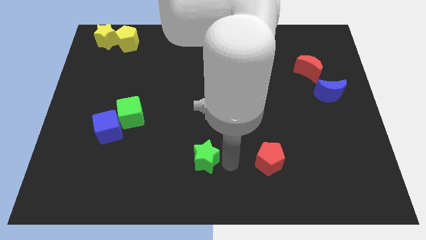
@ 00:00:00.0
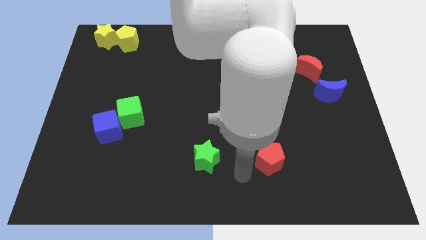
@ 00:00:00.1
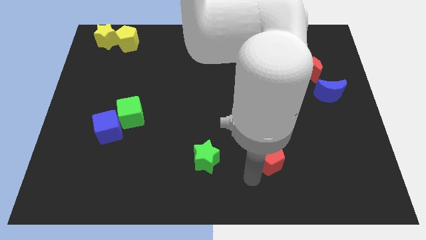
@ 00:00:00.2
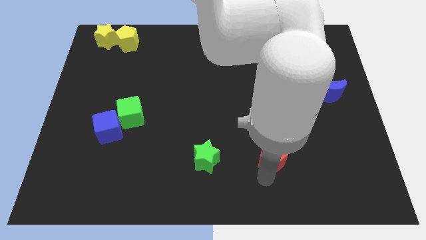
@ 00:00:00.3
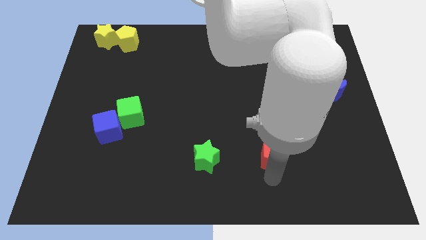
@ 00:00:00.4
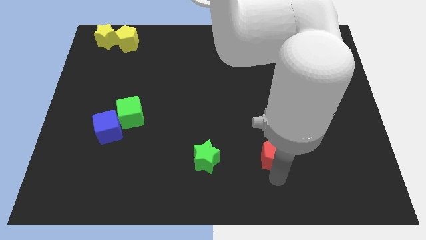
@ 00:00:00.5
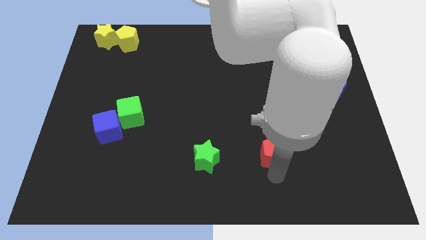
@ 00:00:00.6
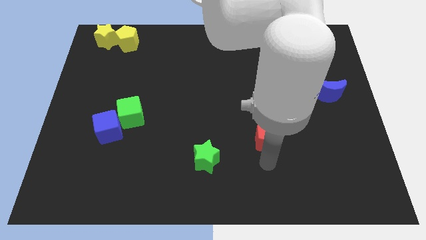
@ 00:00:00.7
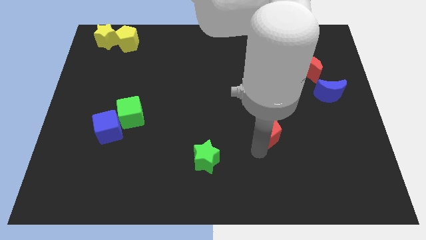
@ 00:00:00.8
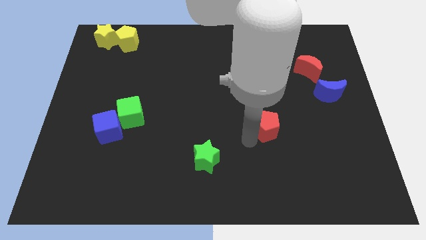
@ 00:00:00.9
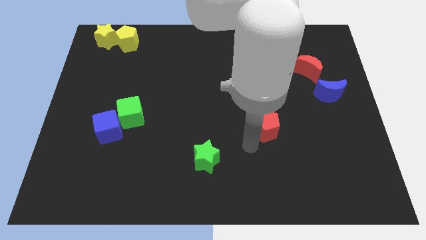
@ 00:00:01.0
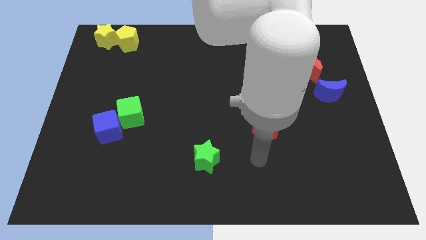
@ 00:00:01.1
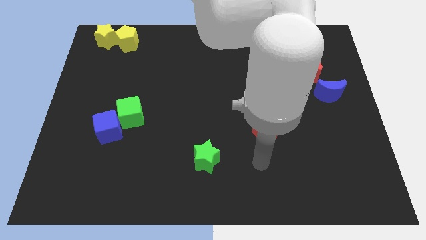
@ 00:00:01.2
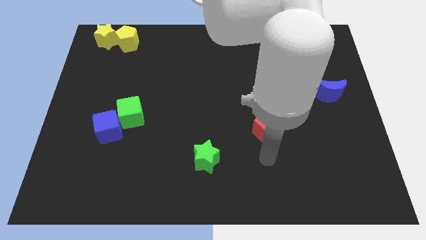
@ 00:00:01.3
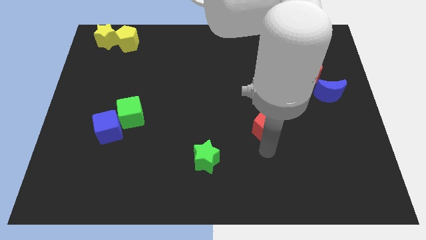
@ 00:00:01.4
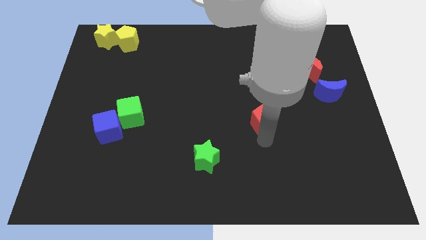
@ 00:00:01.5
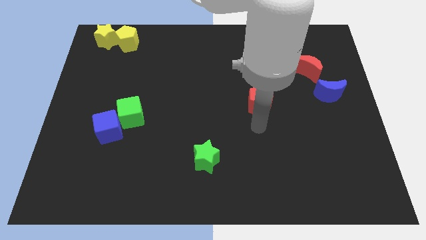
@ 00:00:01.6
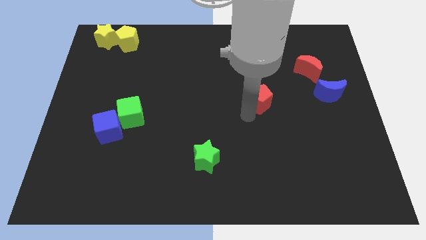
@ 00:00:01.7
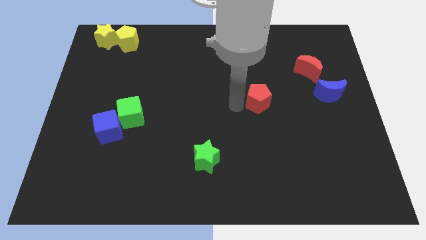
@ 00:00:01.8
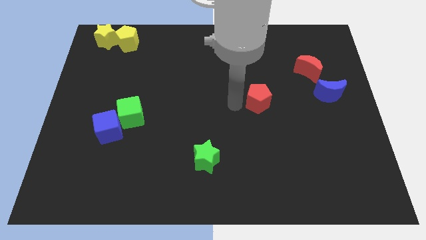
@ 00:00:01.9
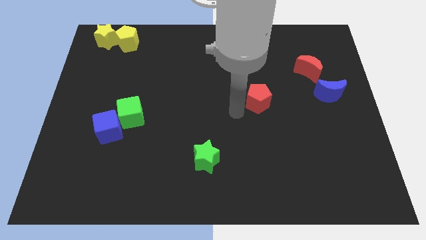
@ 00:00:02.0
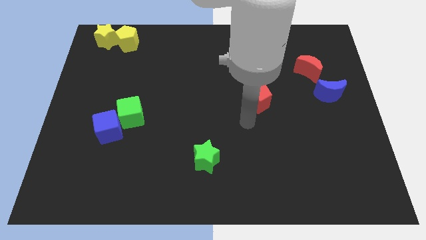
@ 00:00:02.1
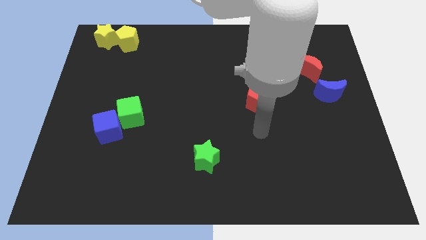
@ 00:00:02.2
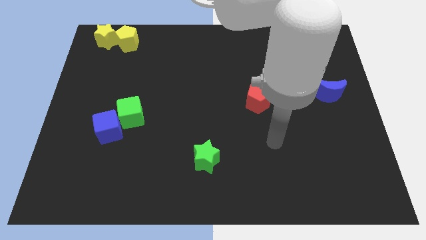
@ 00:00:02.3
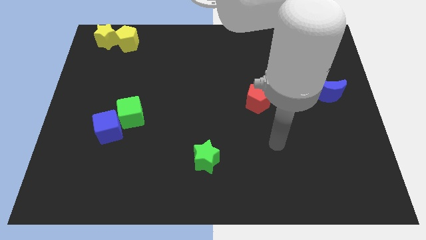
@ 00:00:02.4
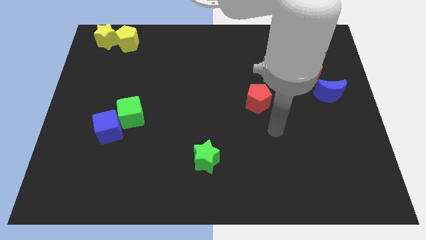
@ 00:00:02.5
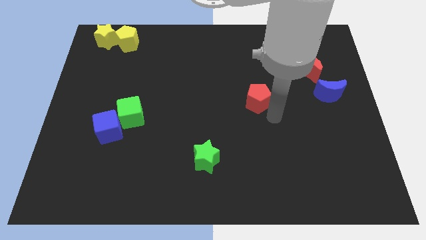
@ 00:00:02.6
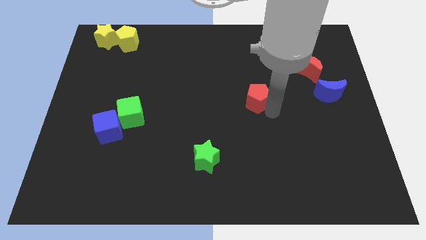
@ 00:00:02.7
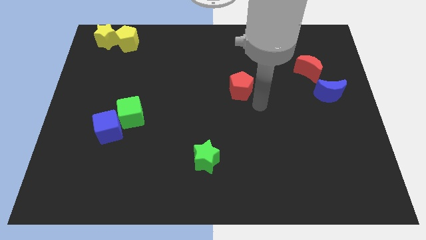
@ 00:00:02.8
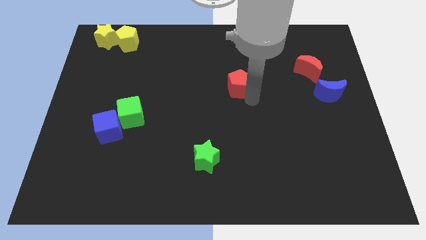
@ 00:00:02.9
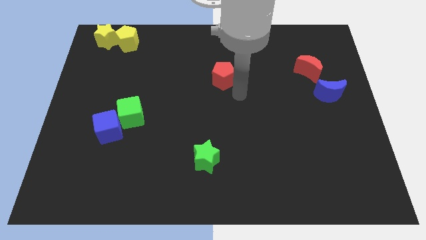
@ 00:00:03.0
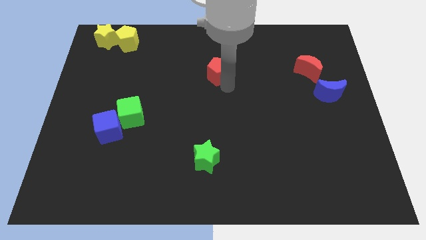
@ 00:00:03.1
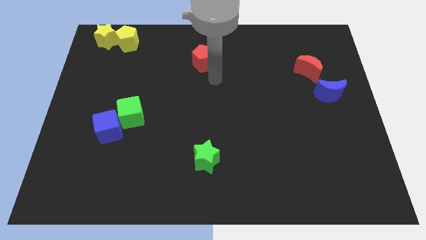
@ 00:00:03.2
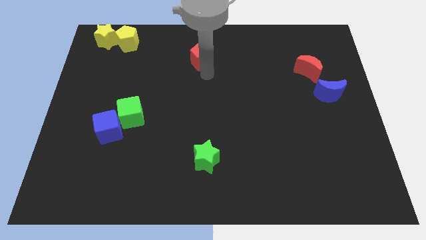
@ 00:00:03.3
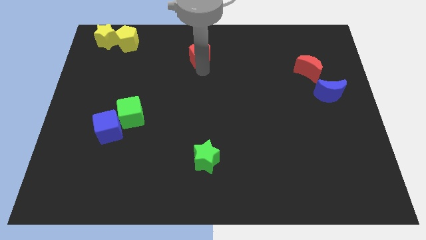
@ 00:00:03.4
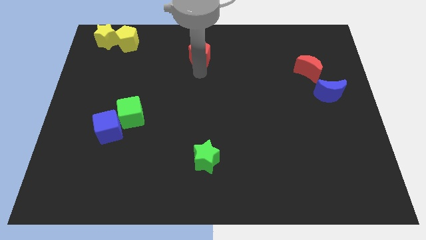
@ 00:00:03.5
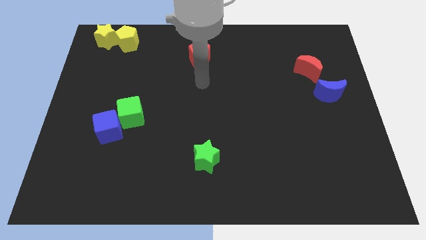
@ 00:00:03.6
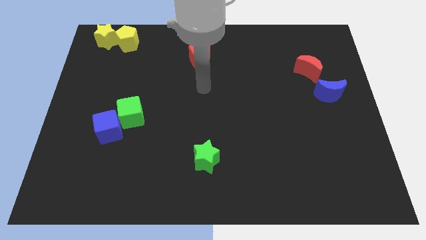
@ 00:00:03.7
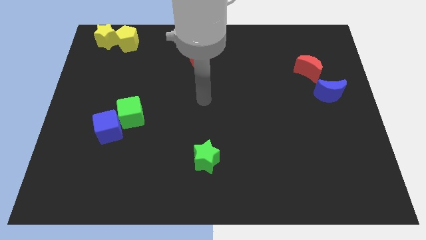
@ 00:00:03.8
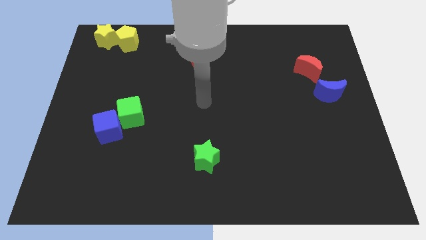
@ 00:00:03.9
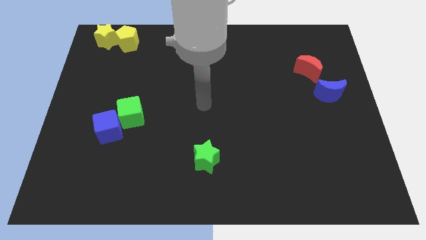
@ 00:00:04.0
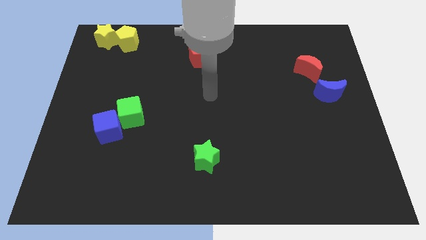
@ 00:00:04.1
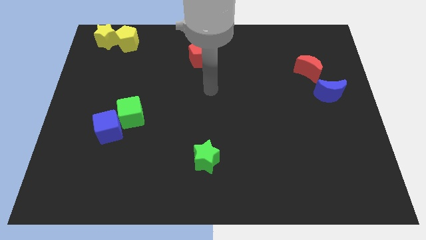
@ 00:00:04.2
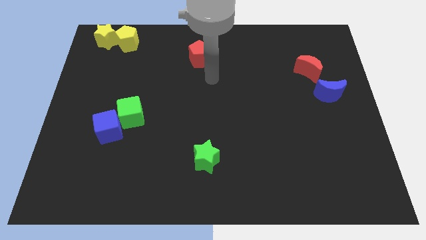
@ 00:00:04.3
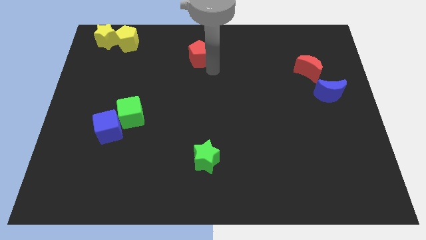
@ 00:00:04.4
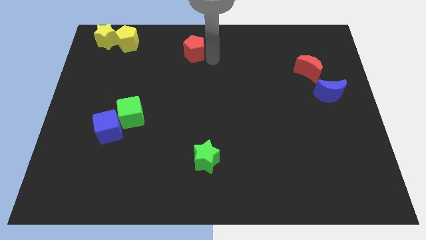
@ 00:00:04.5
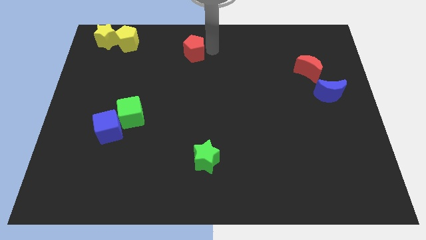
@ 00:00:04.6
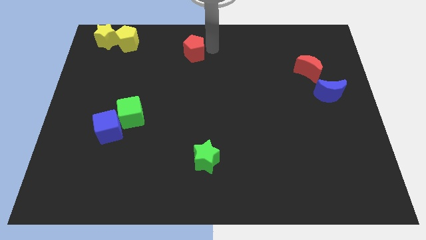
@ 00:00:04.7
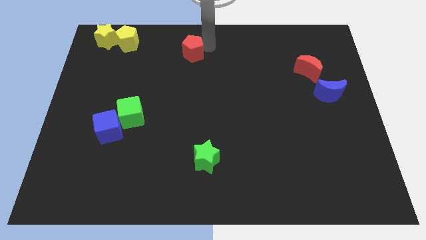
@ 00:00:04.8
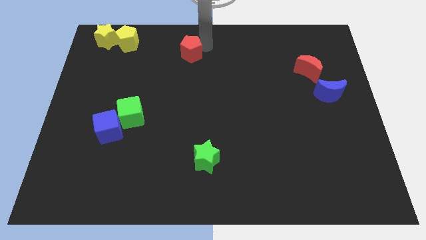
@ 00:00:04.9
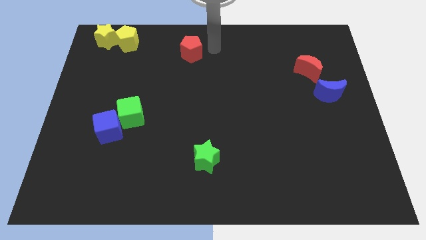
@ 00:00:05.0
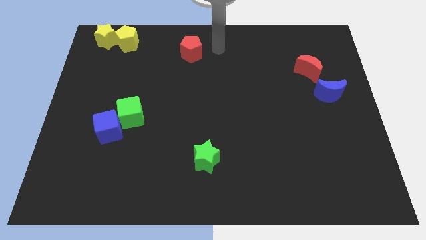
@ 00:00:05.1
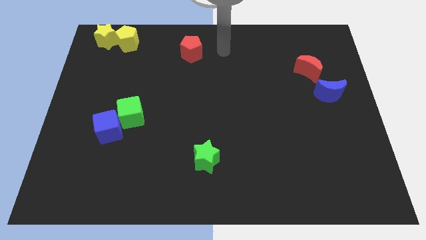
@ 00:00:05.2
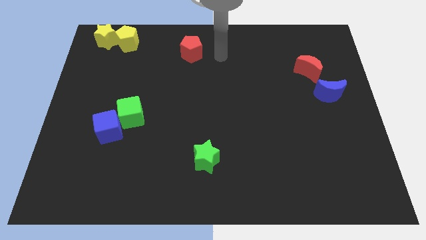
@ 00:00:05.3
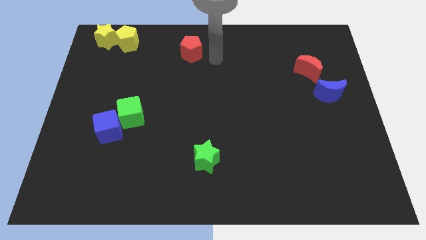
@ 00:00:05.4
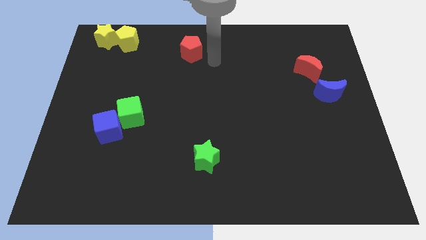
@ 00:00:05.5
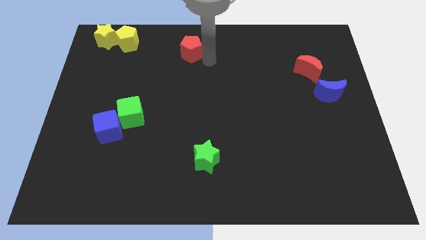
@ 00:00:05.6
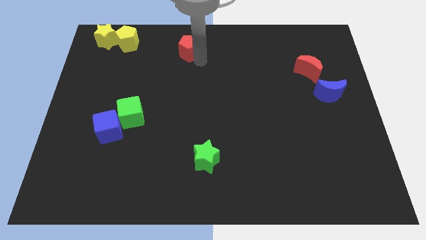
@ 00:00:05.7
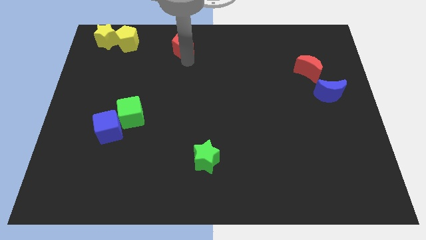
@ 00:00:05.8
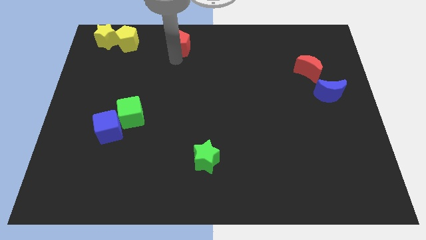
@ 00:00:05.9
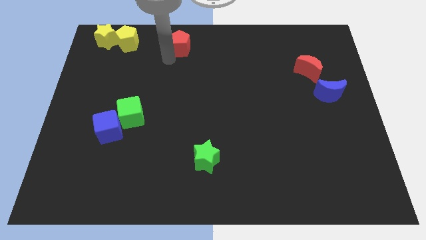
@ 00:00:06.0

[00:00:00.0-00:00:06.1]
move the red pentagon towards the yellow pentagon

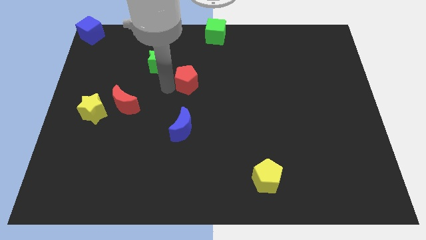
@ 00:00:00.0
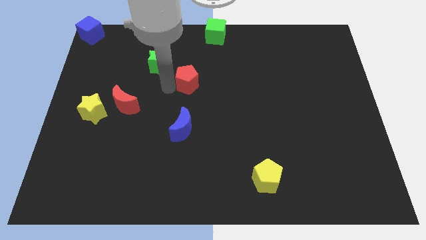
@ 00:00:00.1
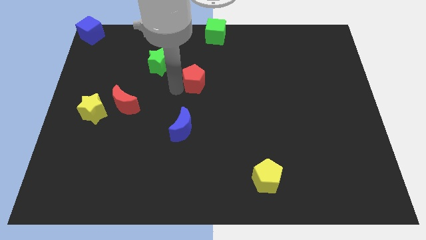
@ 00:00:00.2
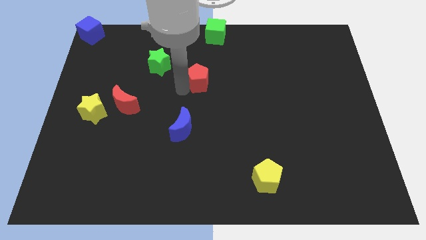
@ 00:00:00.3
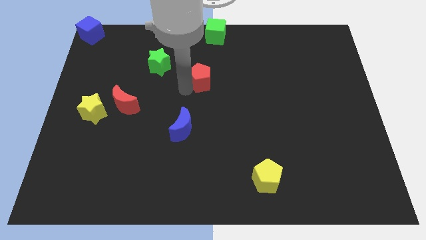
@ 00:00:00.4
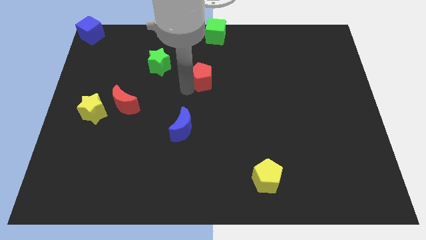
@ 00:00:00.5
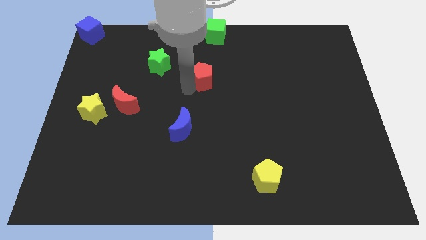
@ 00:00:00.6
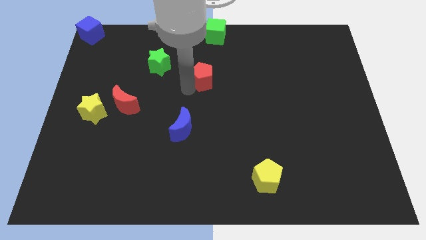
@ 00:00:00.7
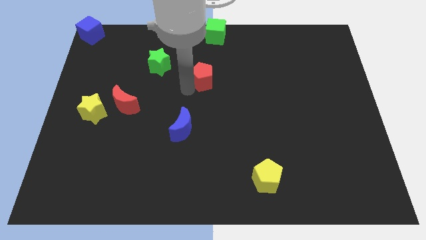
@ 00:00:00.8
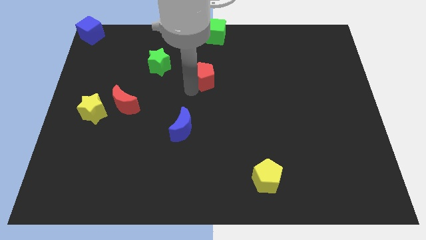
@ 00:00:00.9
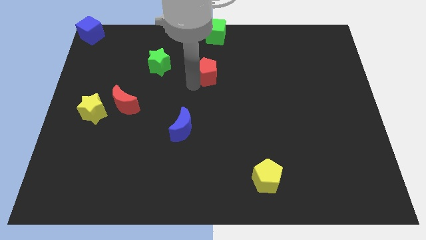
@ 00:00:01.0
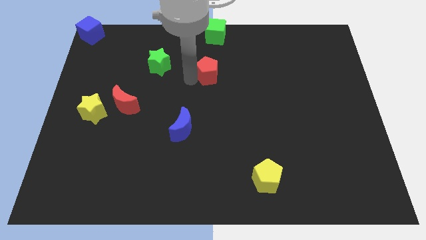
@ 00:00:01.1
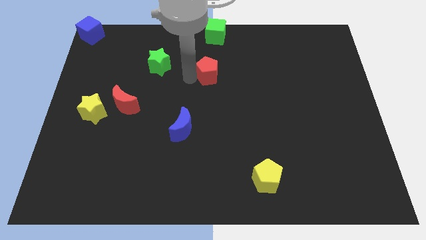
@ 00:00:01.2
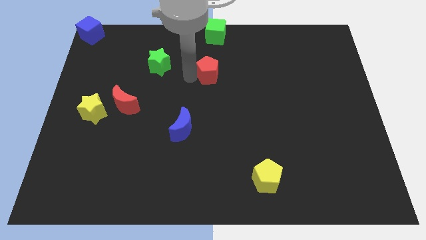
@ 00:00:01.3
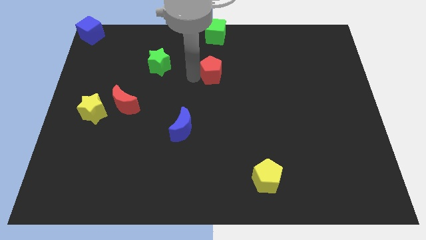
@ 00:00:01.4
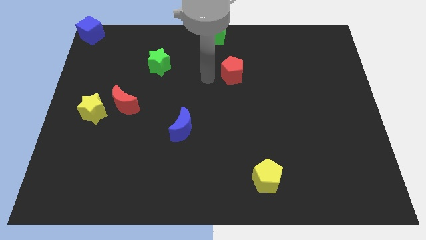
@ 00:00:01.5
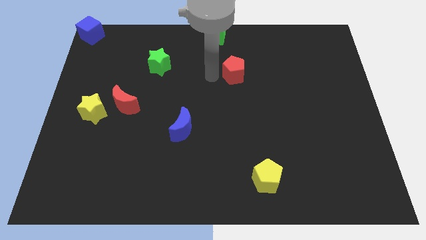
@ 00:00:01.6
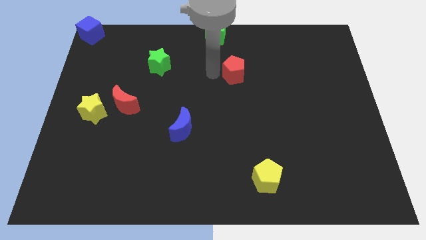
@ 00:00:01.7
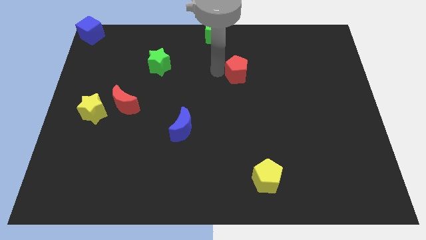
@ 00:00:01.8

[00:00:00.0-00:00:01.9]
move the red pentagon to the right of the board

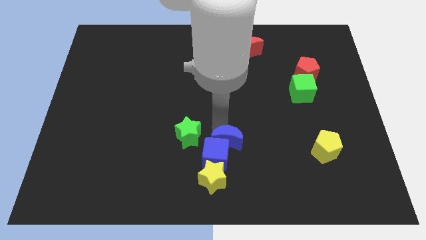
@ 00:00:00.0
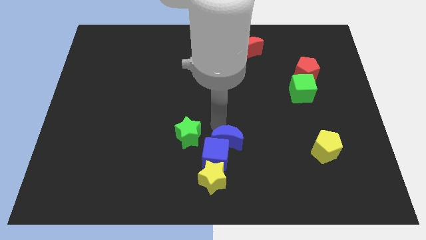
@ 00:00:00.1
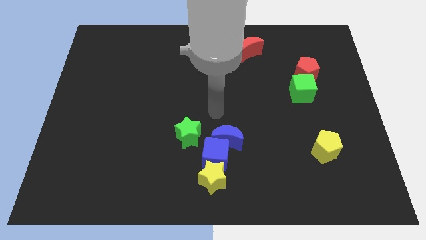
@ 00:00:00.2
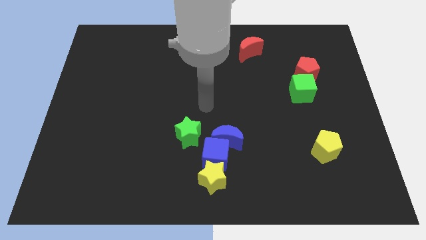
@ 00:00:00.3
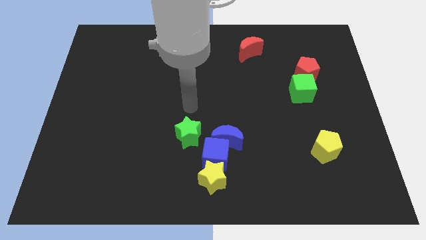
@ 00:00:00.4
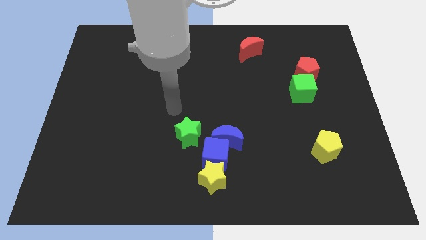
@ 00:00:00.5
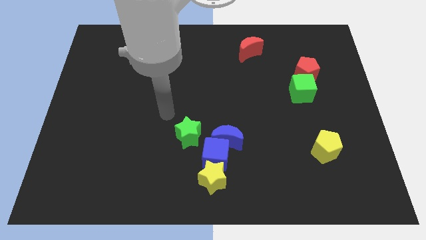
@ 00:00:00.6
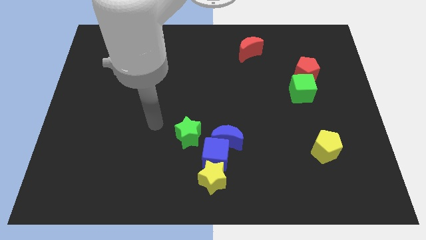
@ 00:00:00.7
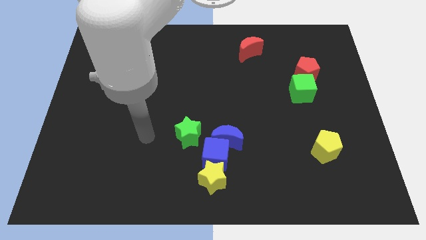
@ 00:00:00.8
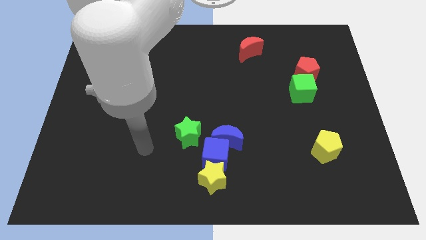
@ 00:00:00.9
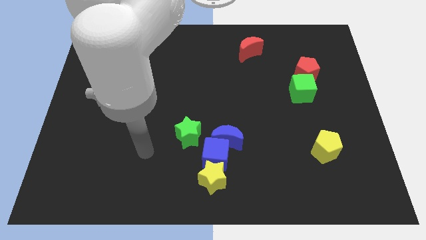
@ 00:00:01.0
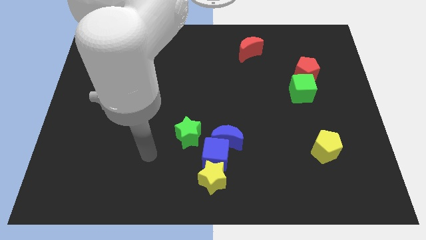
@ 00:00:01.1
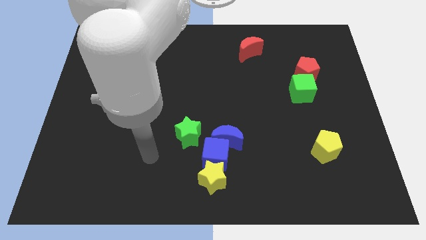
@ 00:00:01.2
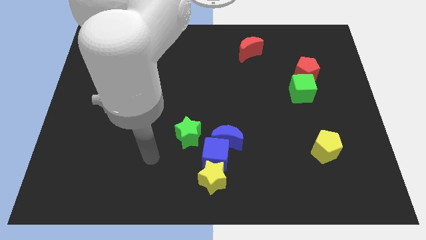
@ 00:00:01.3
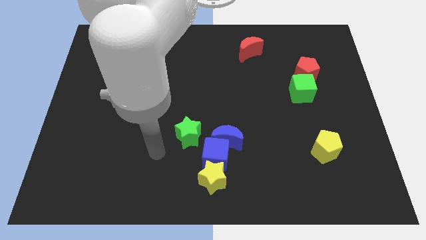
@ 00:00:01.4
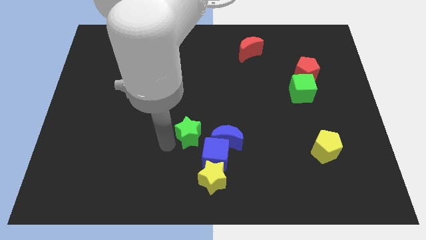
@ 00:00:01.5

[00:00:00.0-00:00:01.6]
move your arm to the left side of the green star
